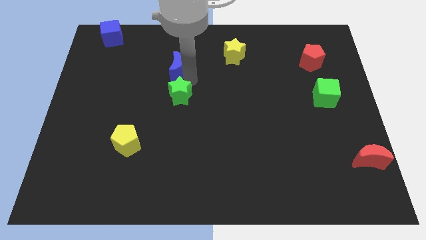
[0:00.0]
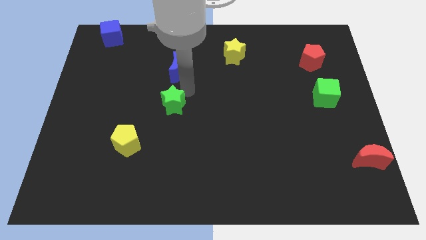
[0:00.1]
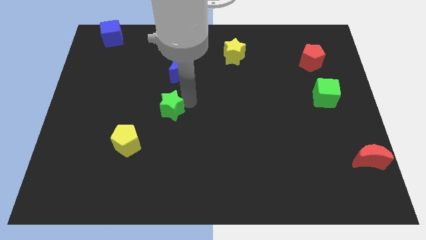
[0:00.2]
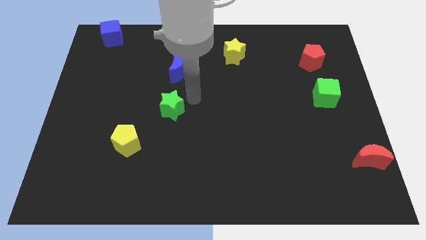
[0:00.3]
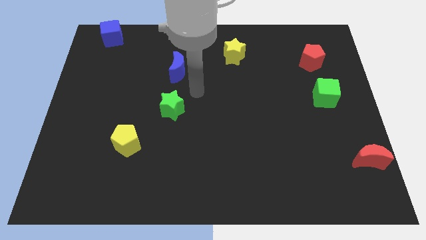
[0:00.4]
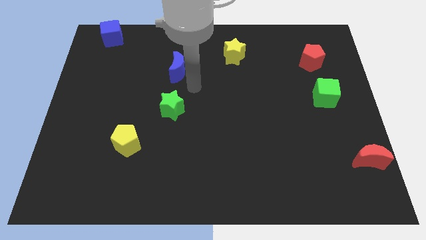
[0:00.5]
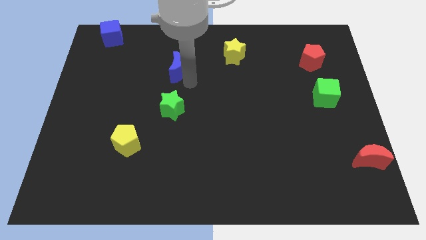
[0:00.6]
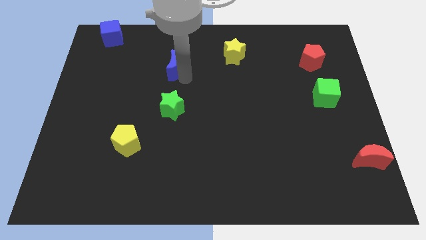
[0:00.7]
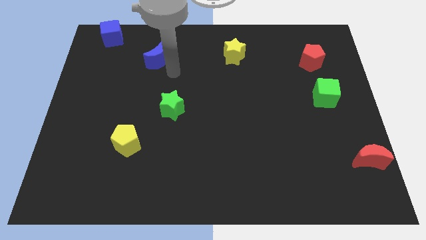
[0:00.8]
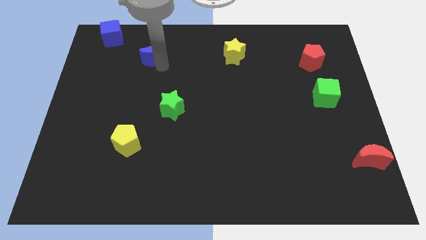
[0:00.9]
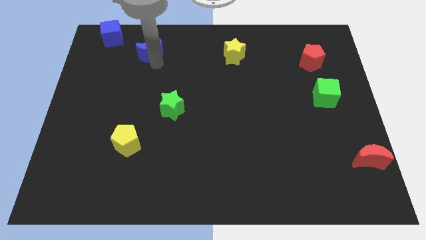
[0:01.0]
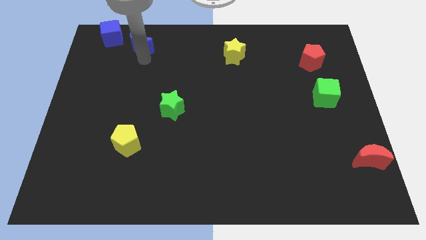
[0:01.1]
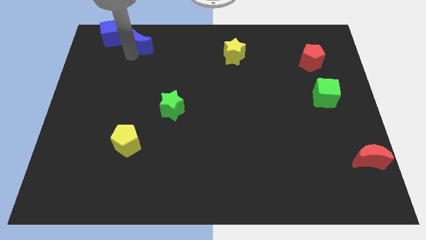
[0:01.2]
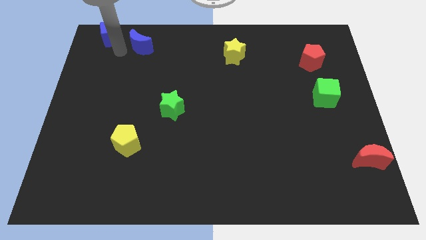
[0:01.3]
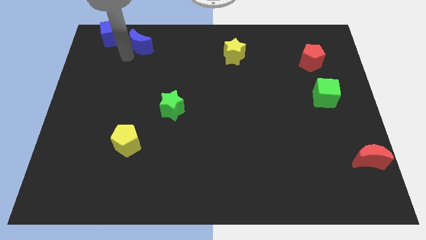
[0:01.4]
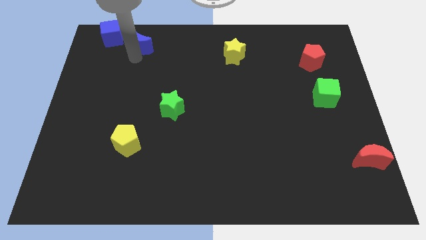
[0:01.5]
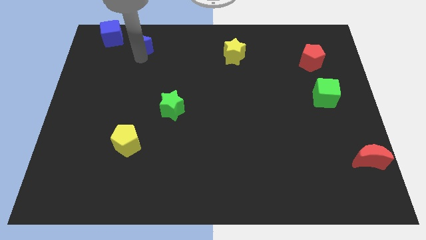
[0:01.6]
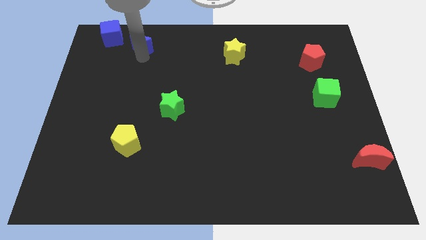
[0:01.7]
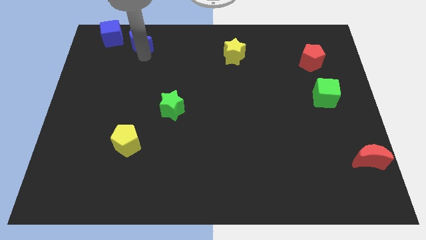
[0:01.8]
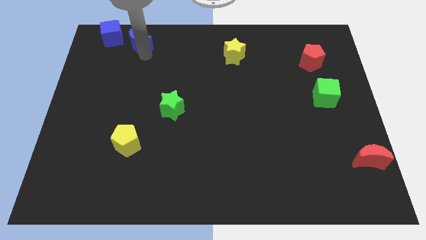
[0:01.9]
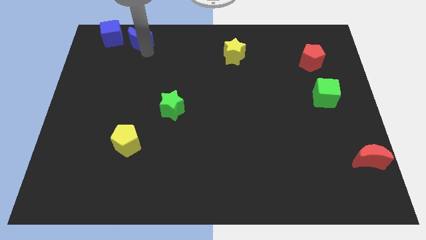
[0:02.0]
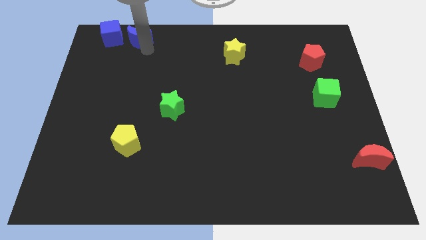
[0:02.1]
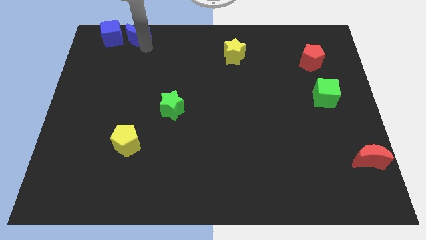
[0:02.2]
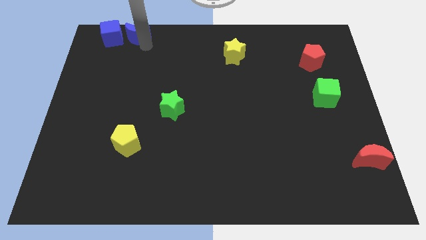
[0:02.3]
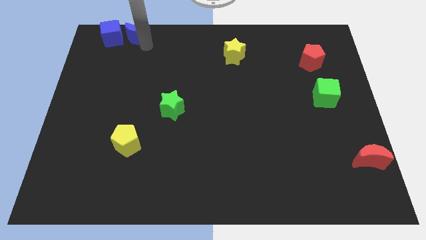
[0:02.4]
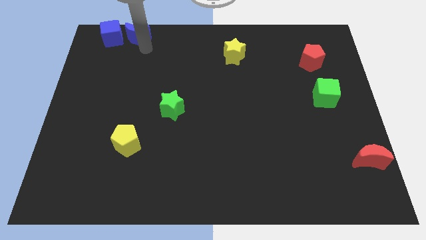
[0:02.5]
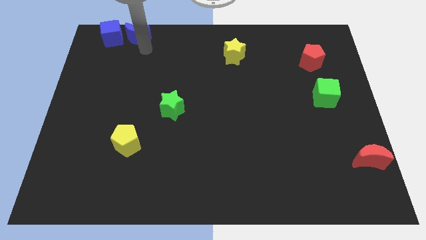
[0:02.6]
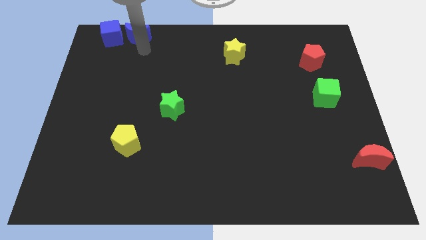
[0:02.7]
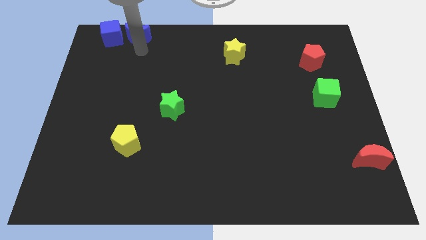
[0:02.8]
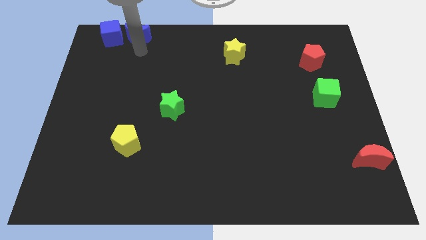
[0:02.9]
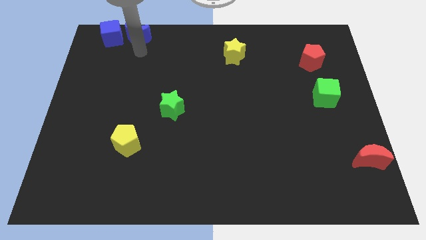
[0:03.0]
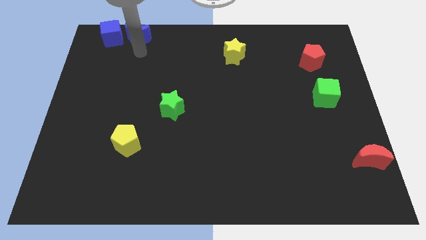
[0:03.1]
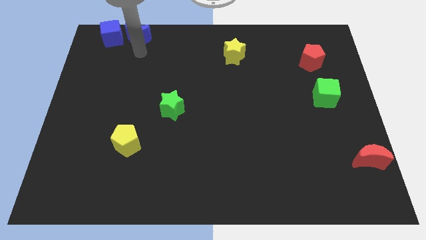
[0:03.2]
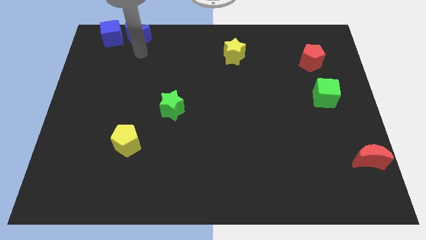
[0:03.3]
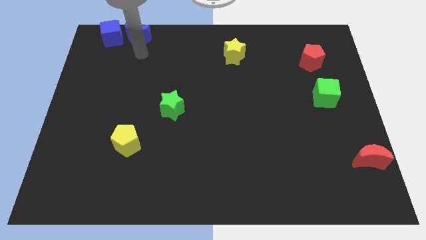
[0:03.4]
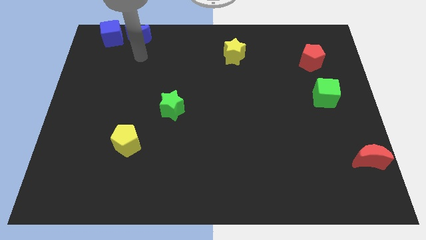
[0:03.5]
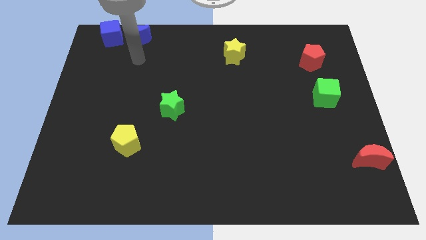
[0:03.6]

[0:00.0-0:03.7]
place blue moon adjacent to blue cube

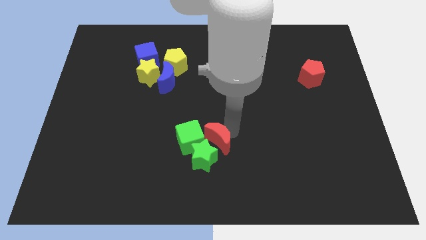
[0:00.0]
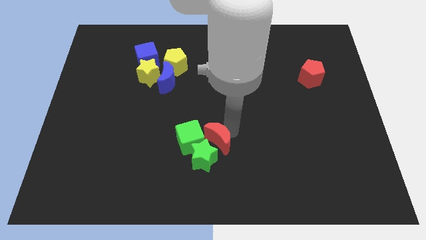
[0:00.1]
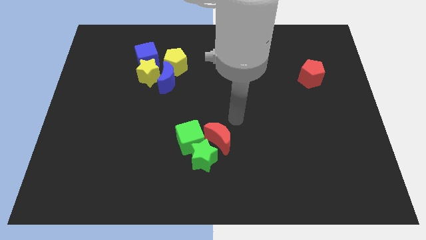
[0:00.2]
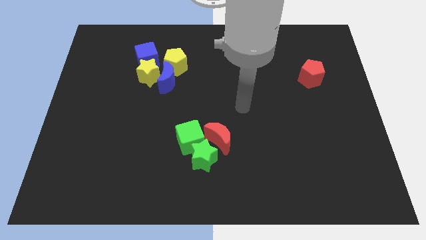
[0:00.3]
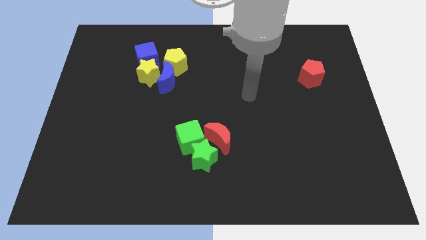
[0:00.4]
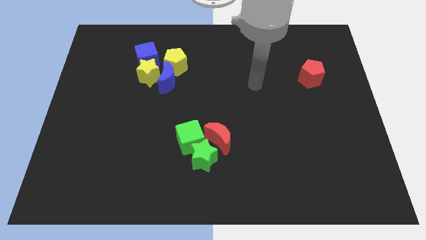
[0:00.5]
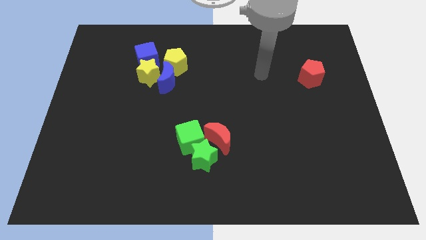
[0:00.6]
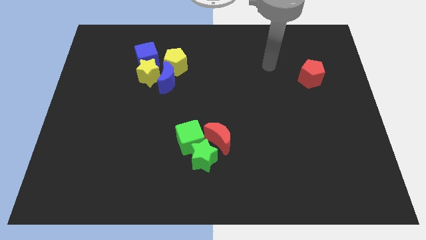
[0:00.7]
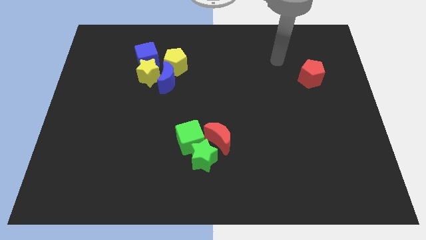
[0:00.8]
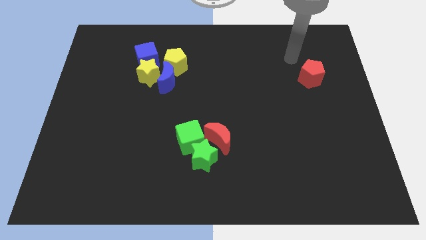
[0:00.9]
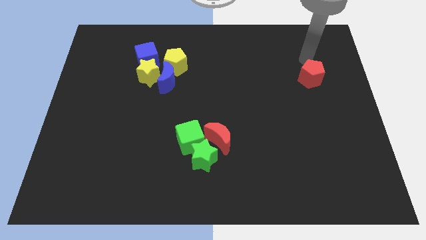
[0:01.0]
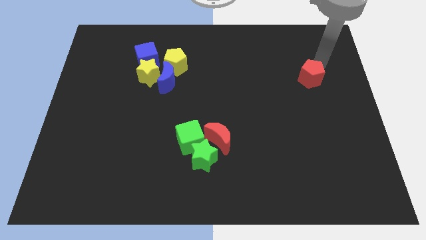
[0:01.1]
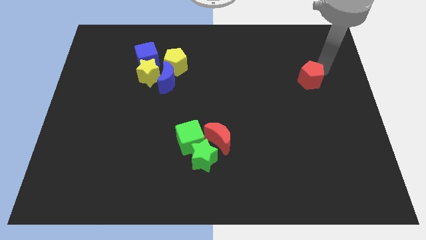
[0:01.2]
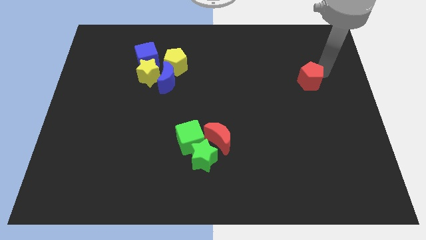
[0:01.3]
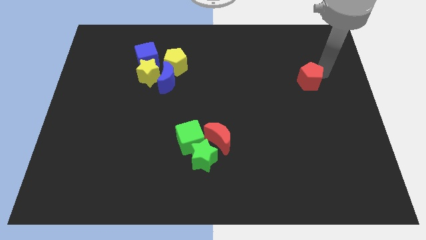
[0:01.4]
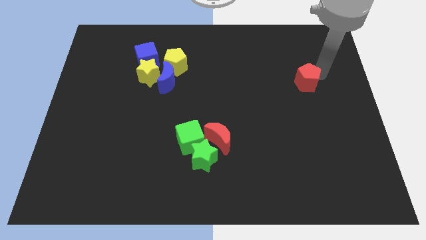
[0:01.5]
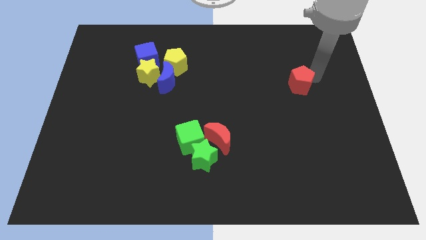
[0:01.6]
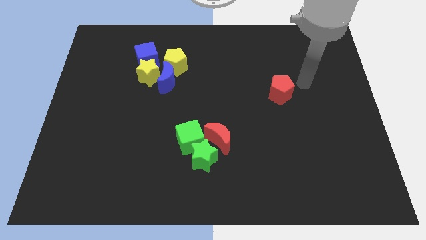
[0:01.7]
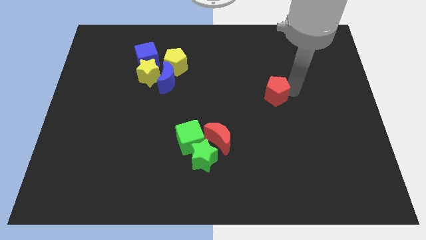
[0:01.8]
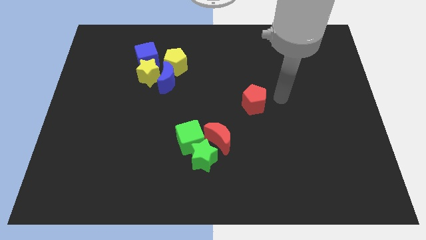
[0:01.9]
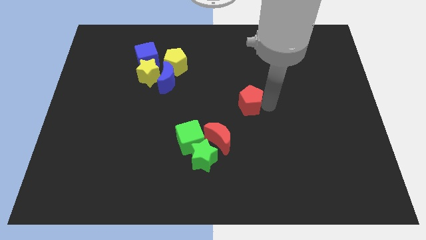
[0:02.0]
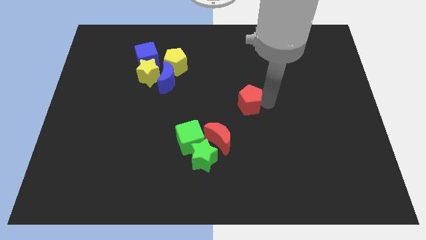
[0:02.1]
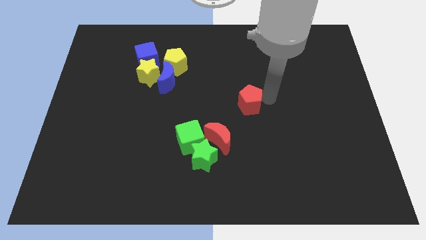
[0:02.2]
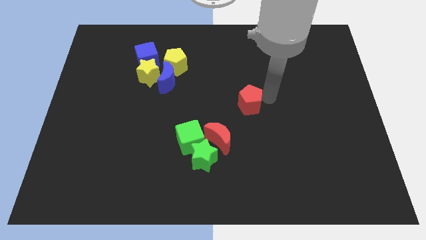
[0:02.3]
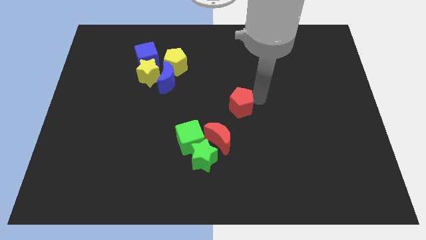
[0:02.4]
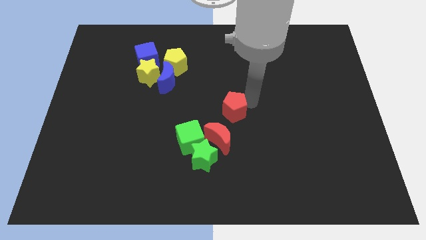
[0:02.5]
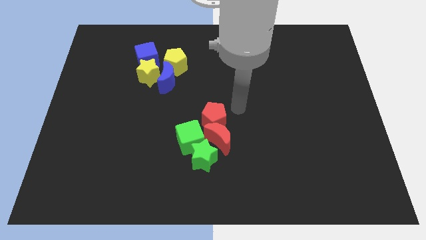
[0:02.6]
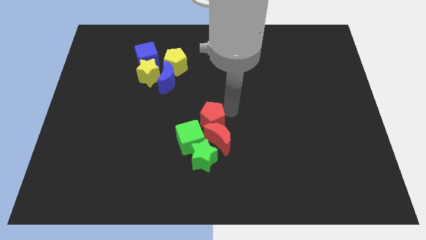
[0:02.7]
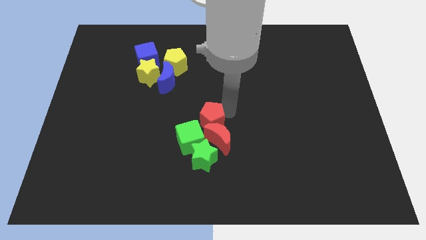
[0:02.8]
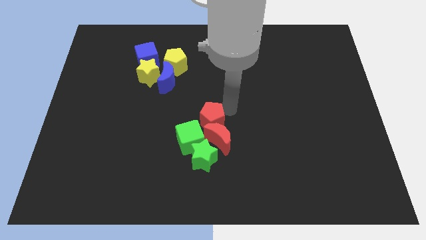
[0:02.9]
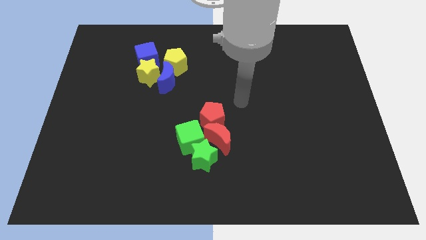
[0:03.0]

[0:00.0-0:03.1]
move the red pentagon into the red crescent

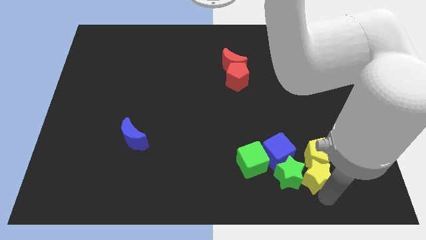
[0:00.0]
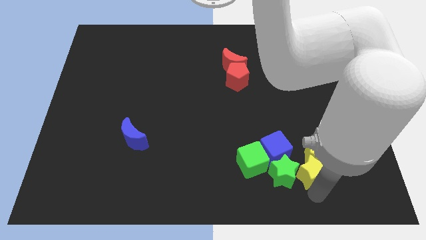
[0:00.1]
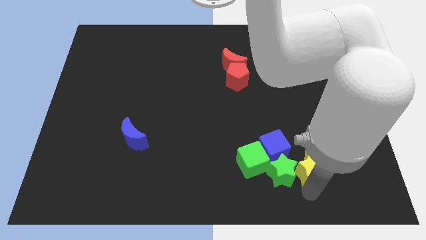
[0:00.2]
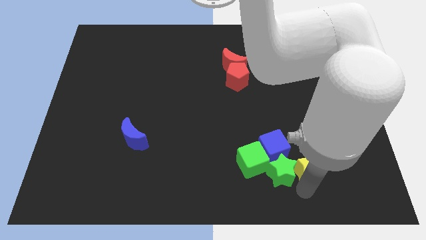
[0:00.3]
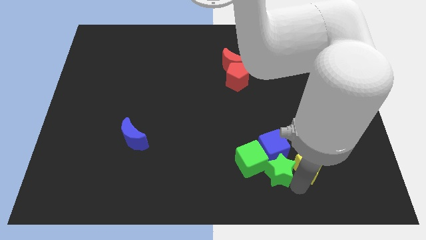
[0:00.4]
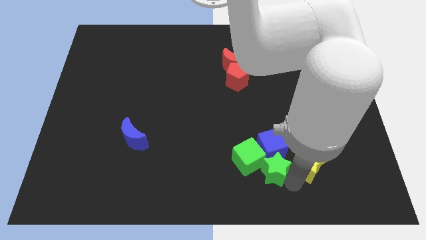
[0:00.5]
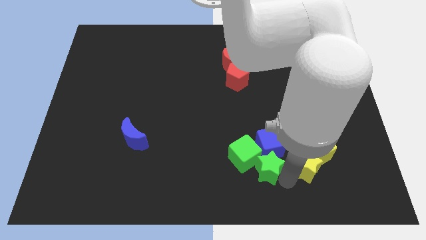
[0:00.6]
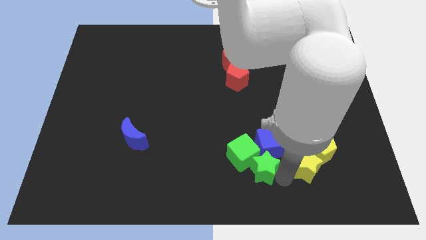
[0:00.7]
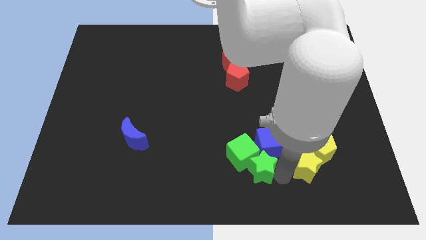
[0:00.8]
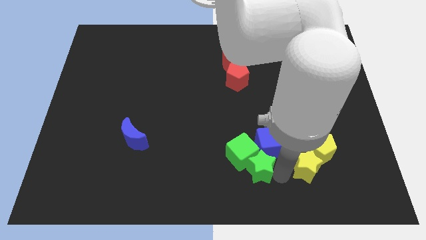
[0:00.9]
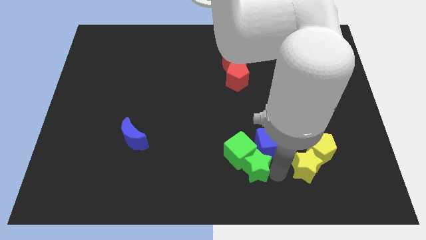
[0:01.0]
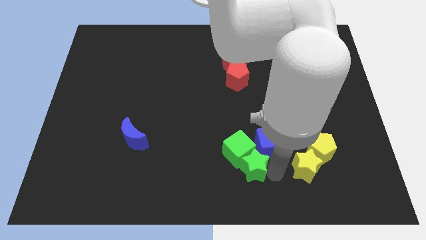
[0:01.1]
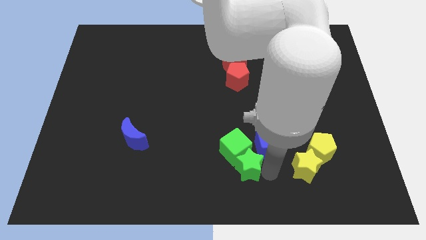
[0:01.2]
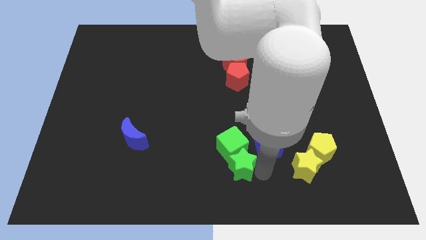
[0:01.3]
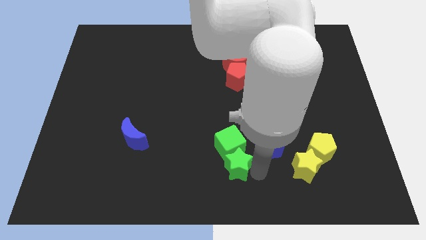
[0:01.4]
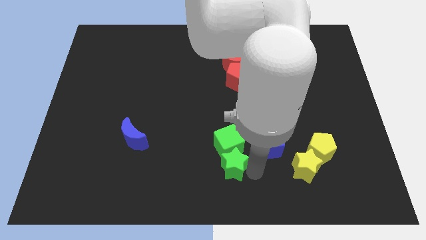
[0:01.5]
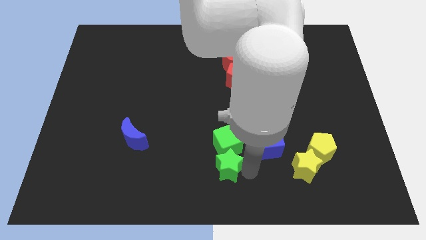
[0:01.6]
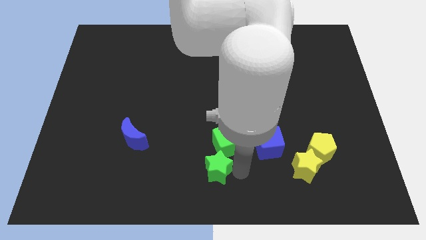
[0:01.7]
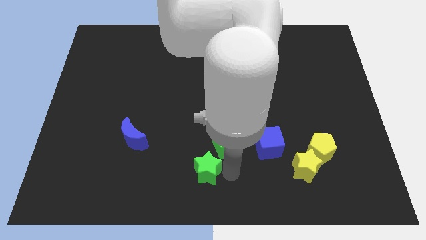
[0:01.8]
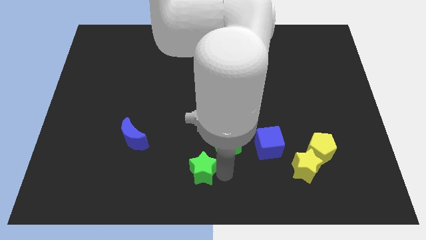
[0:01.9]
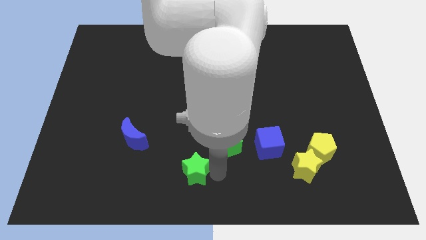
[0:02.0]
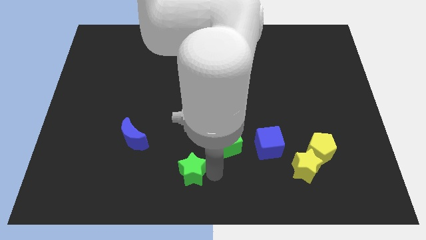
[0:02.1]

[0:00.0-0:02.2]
push the green star into the green cube
